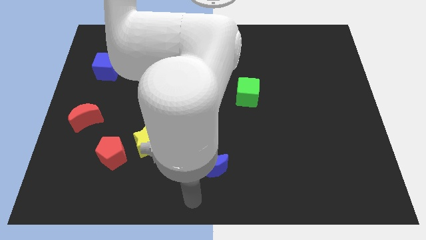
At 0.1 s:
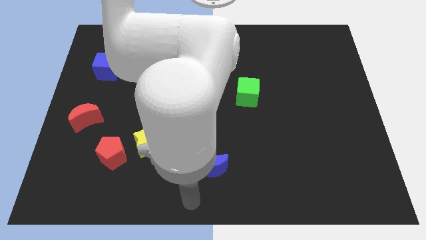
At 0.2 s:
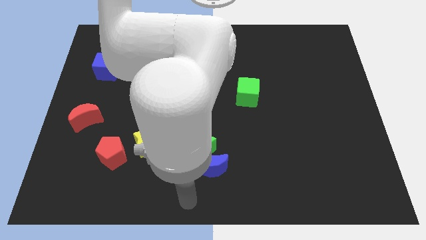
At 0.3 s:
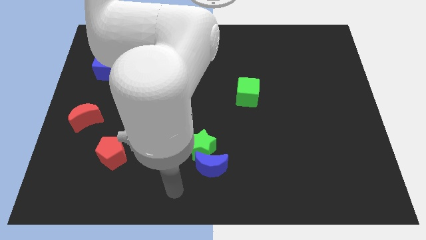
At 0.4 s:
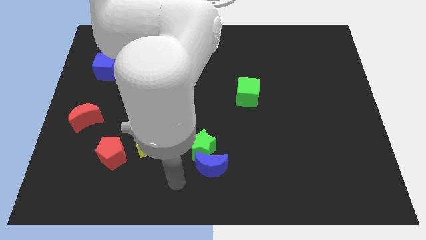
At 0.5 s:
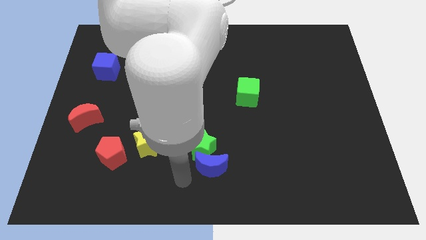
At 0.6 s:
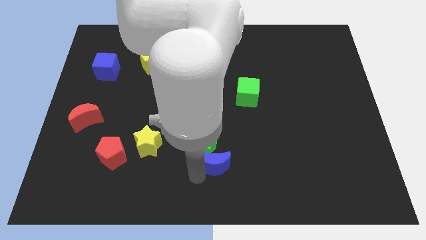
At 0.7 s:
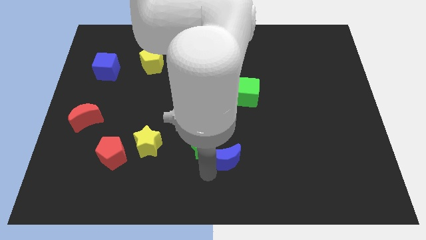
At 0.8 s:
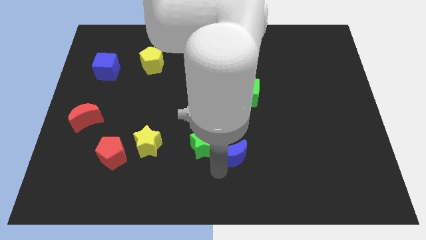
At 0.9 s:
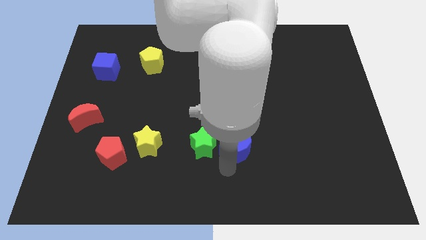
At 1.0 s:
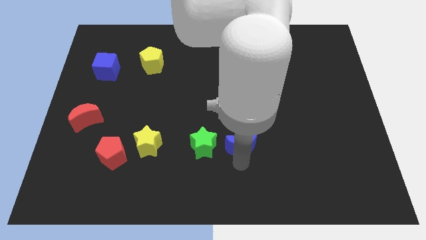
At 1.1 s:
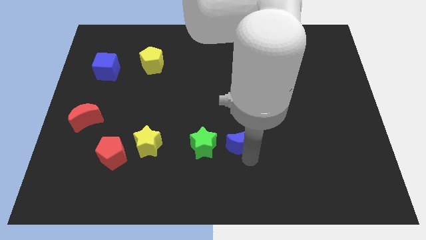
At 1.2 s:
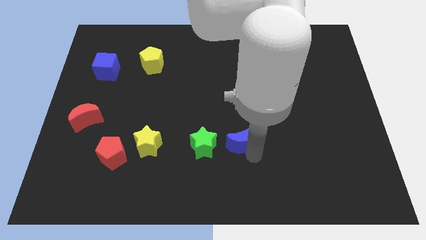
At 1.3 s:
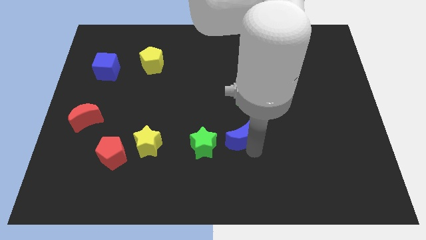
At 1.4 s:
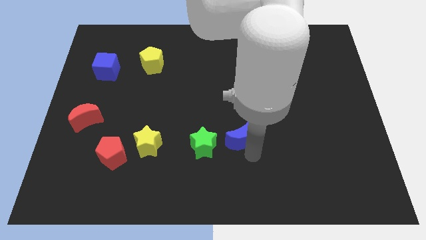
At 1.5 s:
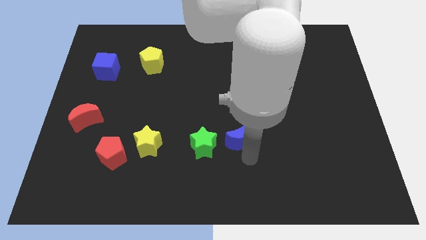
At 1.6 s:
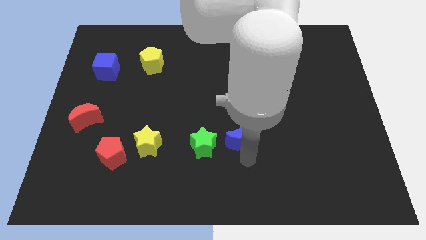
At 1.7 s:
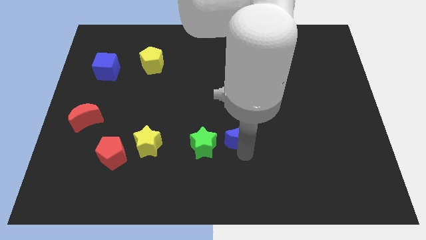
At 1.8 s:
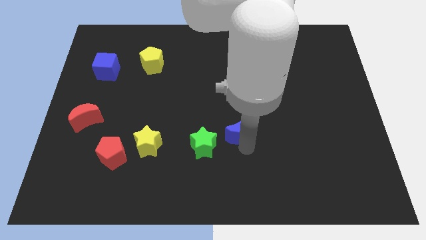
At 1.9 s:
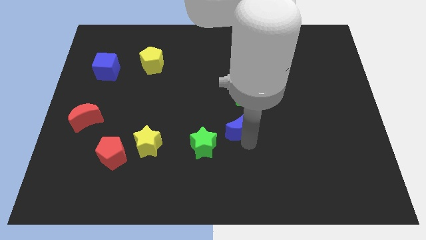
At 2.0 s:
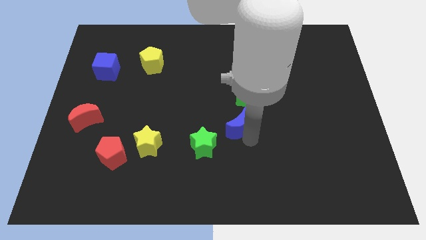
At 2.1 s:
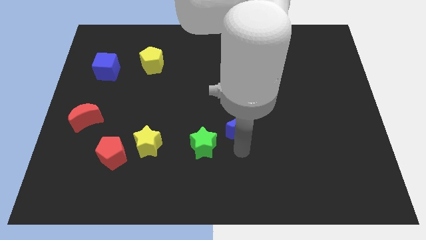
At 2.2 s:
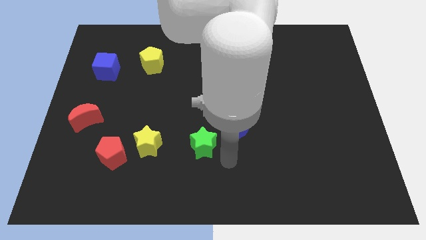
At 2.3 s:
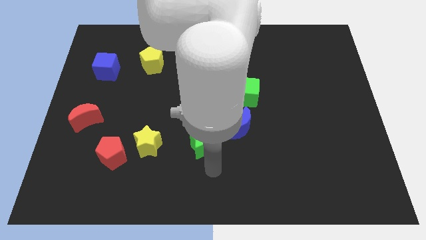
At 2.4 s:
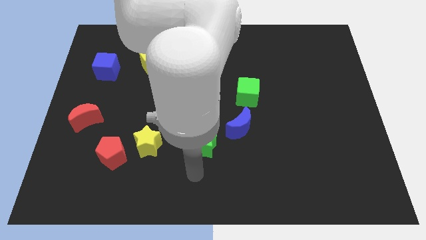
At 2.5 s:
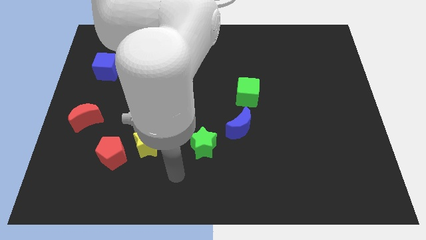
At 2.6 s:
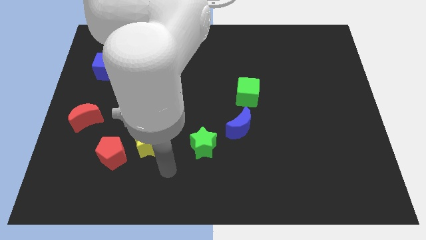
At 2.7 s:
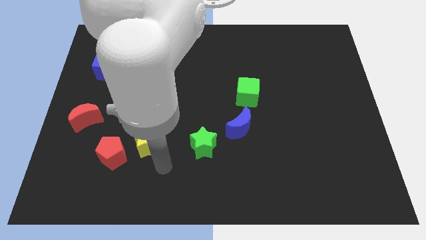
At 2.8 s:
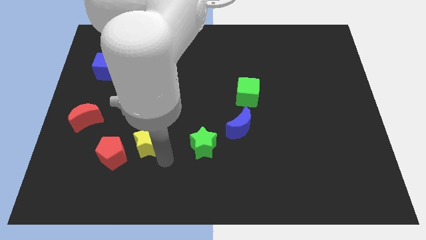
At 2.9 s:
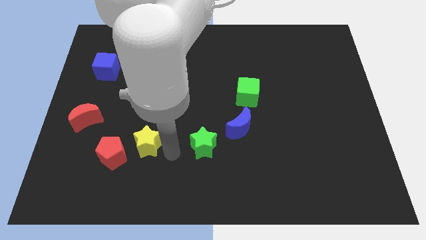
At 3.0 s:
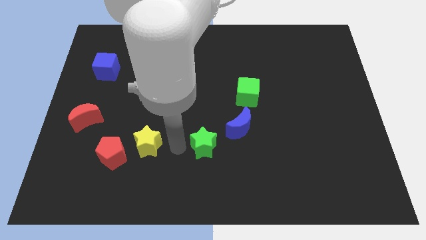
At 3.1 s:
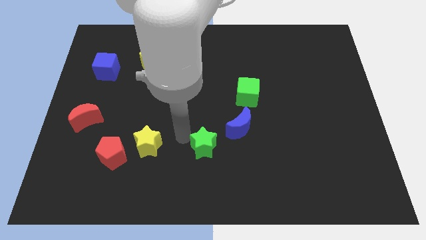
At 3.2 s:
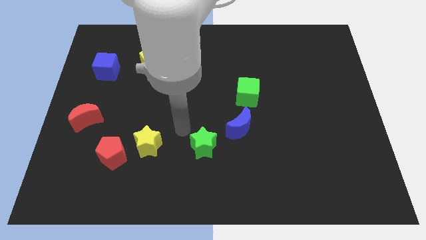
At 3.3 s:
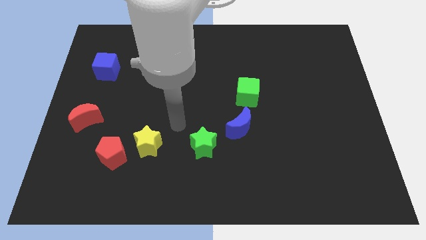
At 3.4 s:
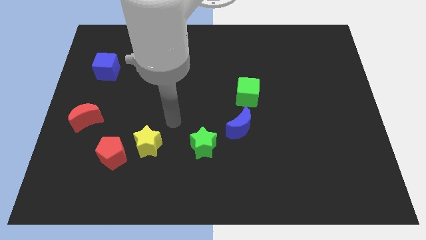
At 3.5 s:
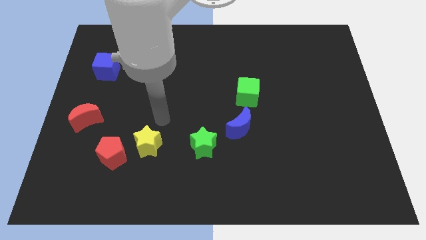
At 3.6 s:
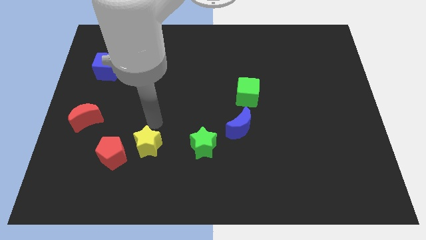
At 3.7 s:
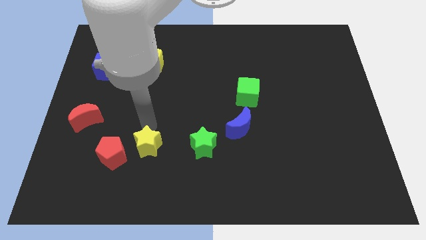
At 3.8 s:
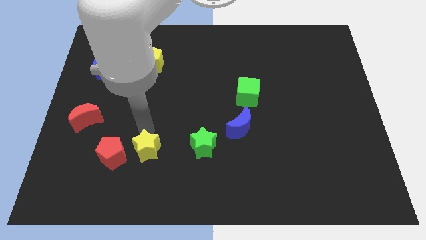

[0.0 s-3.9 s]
place the arm above the yellow star

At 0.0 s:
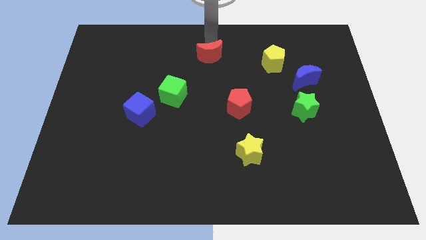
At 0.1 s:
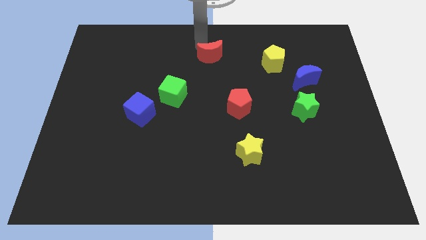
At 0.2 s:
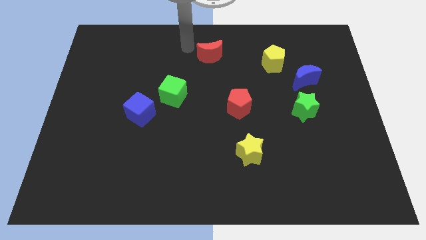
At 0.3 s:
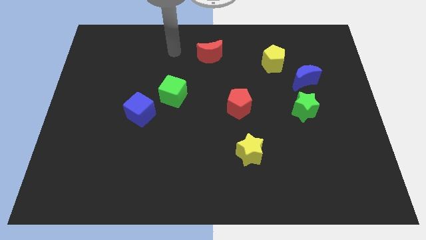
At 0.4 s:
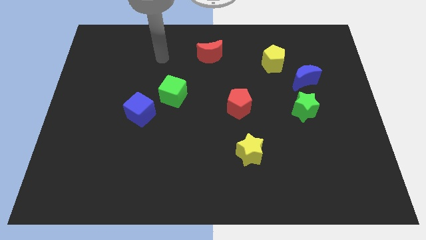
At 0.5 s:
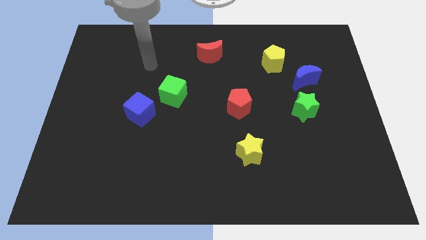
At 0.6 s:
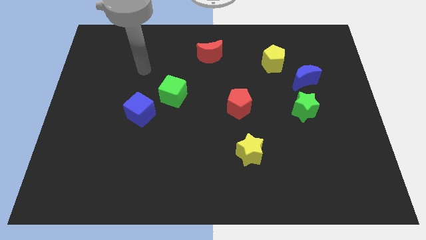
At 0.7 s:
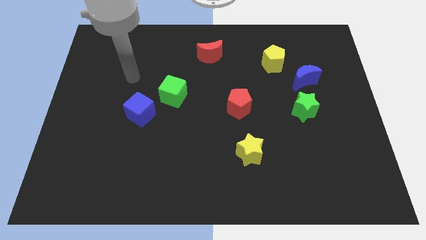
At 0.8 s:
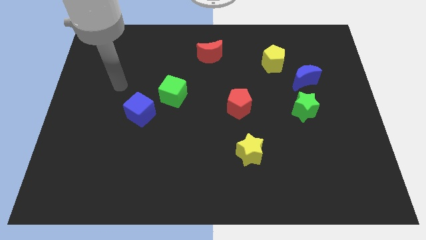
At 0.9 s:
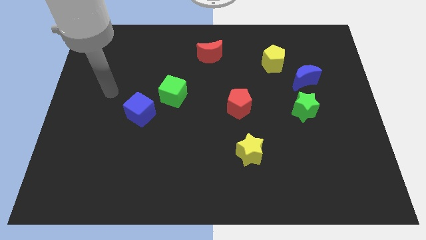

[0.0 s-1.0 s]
take your arm away from the red crescent

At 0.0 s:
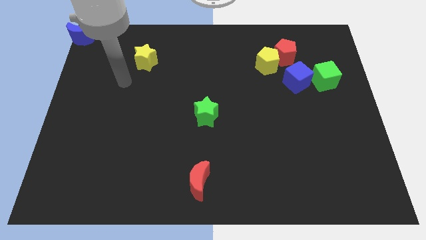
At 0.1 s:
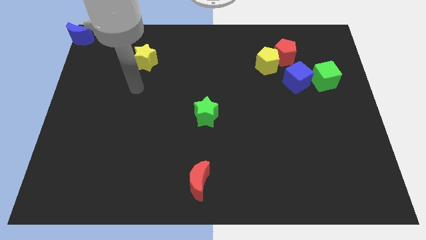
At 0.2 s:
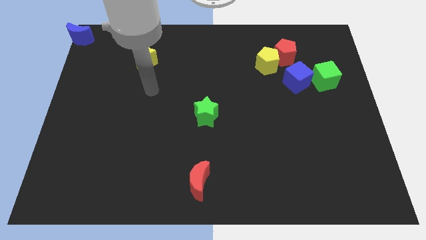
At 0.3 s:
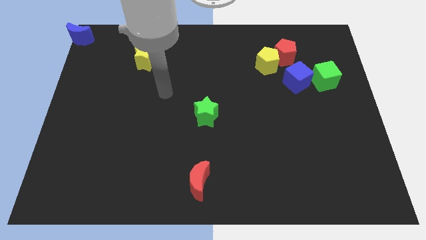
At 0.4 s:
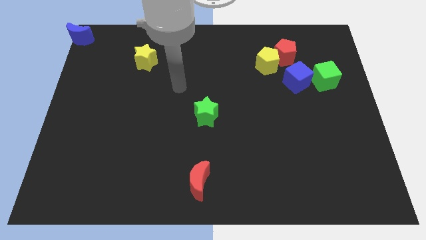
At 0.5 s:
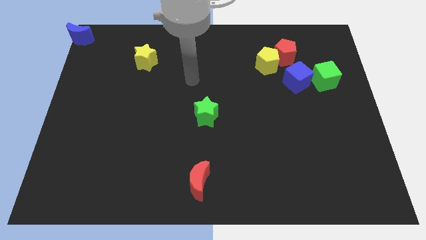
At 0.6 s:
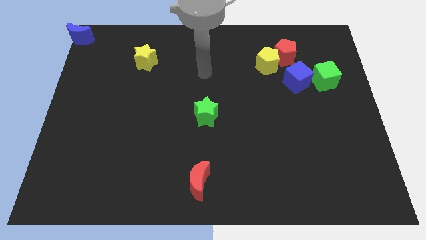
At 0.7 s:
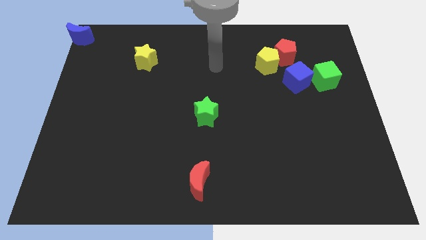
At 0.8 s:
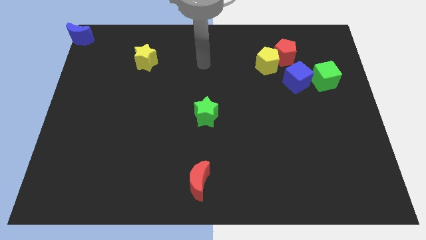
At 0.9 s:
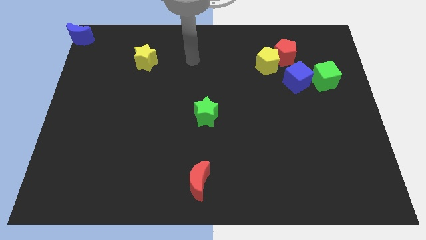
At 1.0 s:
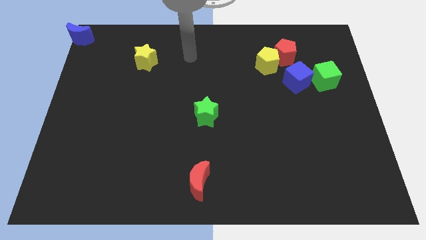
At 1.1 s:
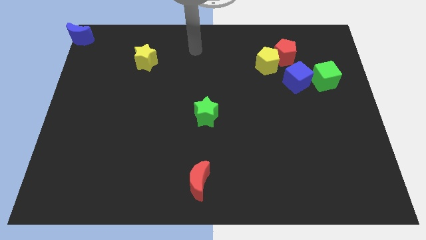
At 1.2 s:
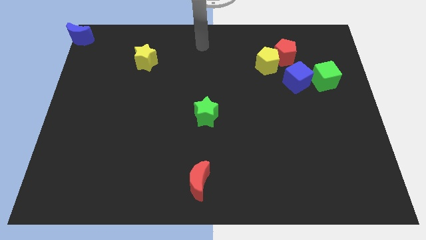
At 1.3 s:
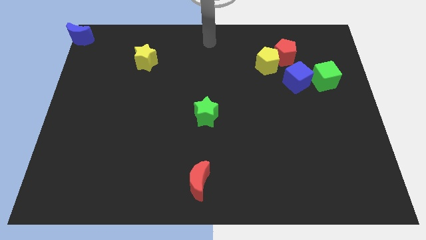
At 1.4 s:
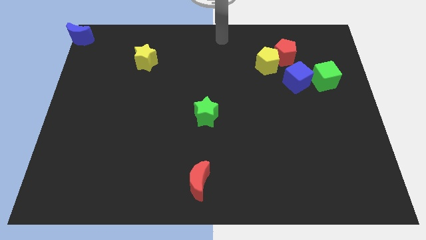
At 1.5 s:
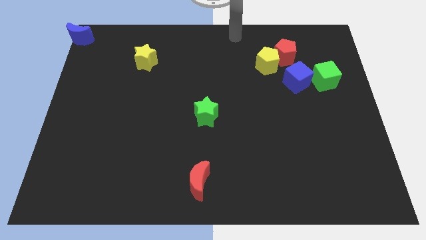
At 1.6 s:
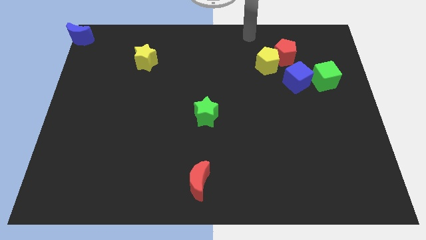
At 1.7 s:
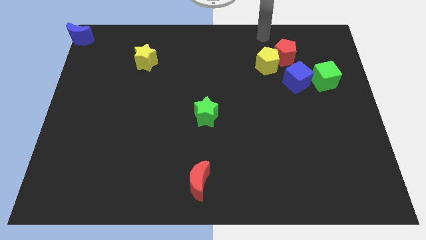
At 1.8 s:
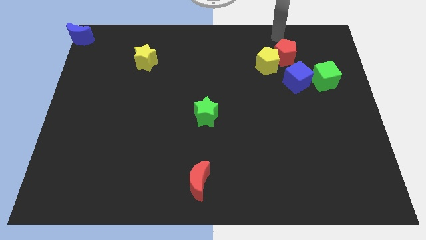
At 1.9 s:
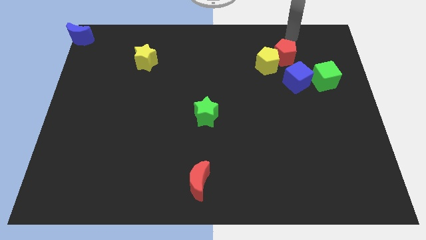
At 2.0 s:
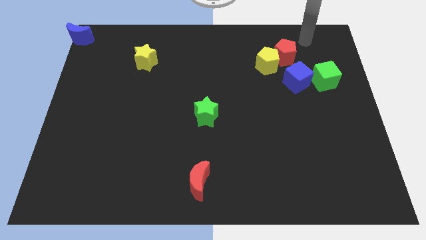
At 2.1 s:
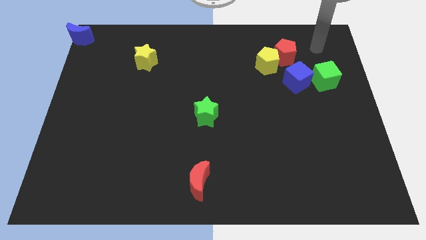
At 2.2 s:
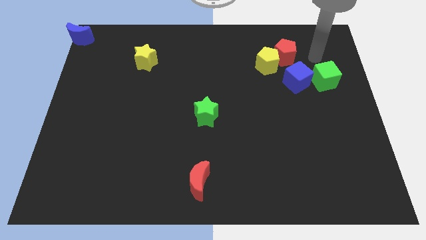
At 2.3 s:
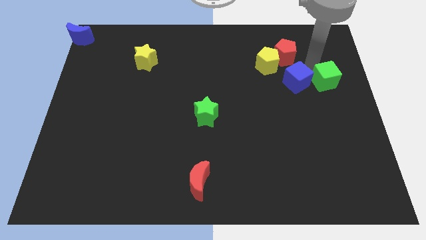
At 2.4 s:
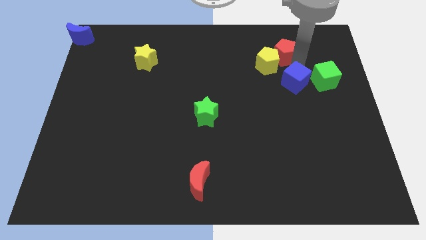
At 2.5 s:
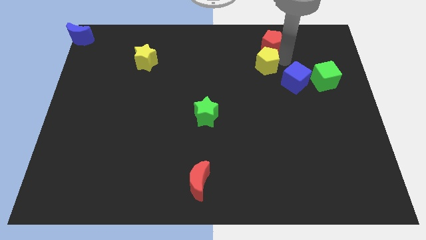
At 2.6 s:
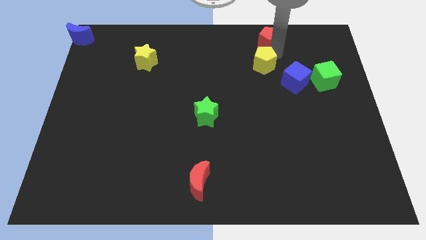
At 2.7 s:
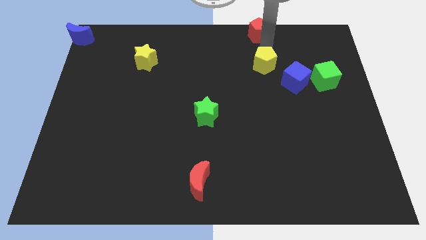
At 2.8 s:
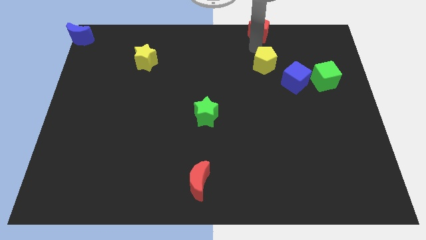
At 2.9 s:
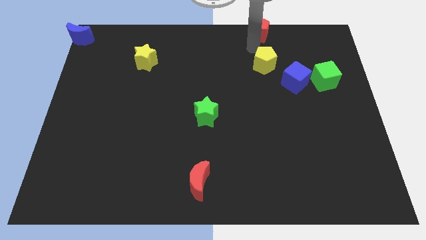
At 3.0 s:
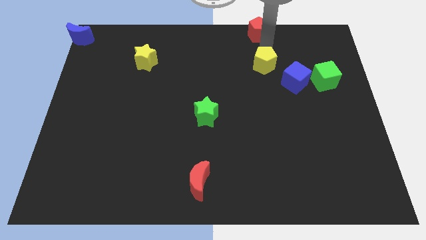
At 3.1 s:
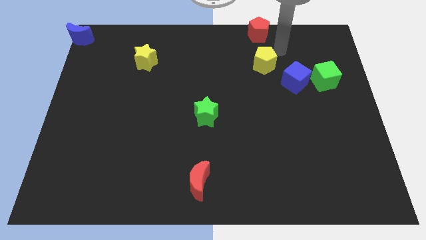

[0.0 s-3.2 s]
place the red pentagon above the yellow pentagon

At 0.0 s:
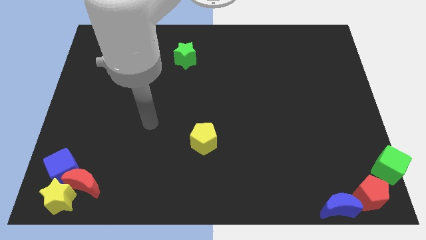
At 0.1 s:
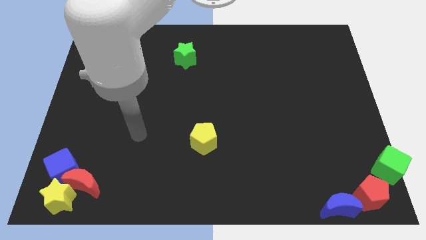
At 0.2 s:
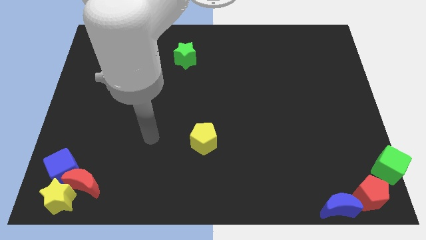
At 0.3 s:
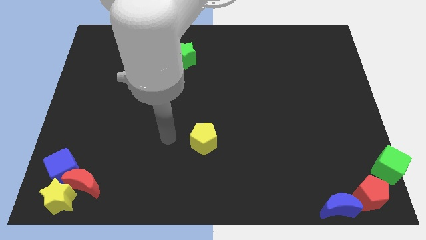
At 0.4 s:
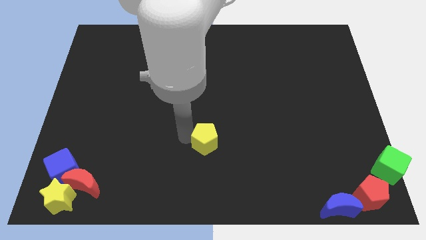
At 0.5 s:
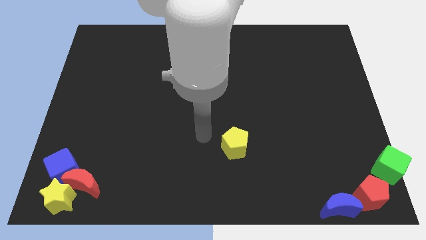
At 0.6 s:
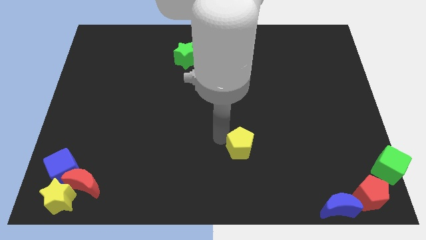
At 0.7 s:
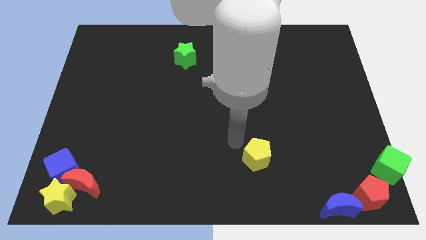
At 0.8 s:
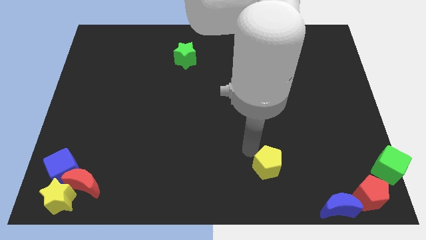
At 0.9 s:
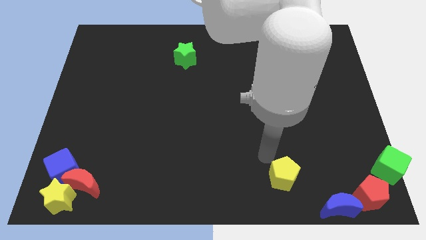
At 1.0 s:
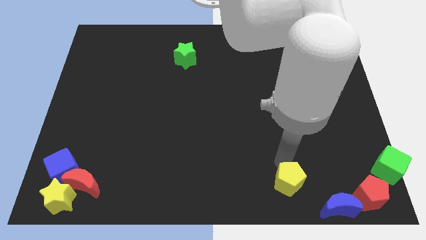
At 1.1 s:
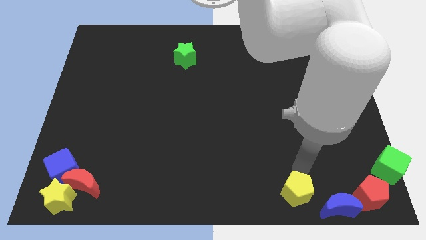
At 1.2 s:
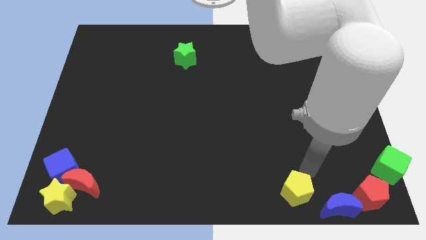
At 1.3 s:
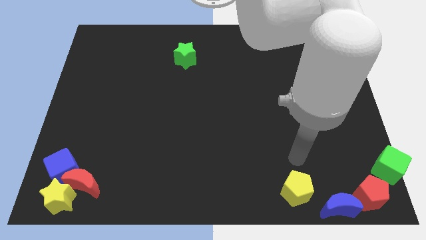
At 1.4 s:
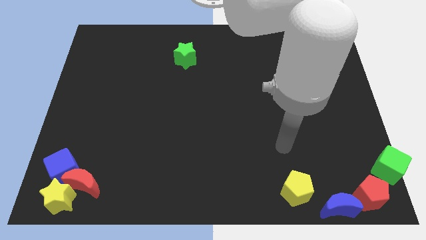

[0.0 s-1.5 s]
move the yellow pentagon towards blue crescent
